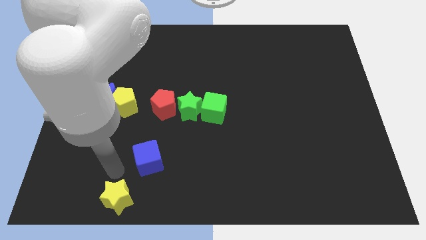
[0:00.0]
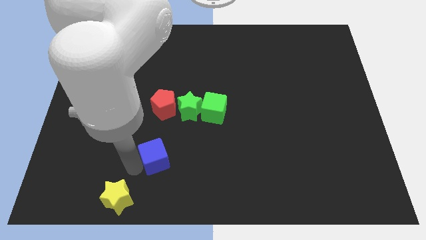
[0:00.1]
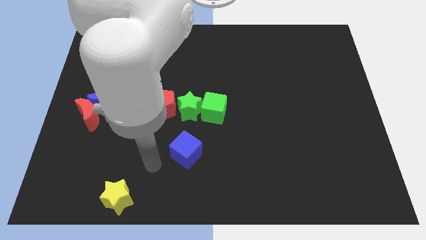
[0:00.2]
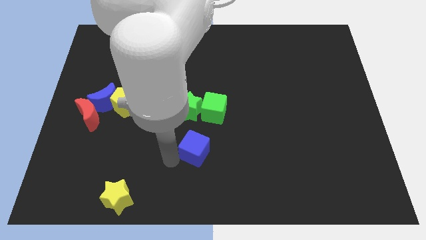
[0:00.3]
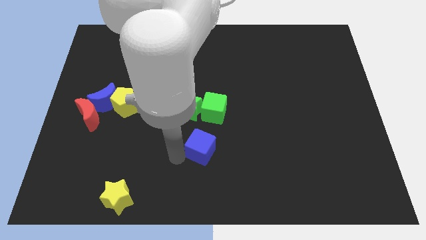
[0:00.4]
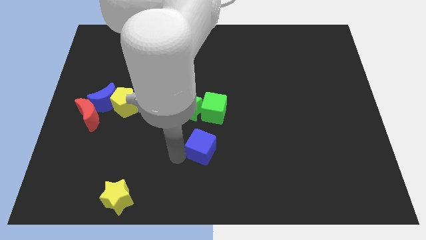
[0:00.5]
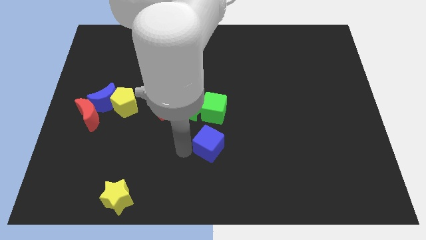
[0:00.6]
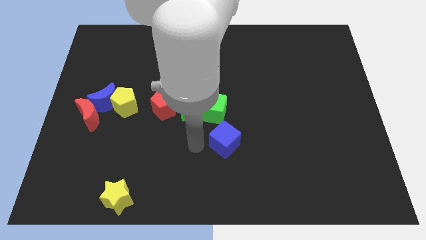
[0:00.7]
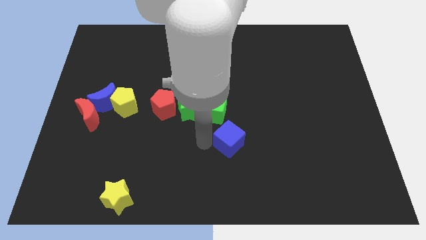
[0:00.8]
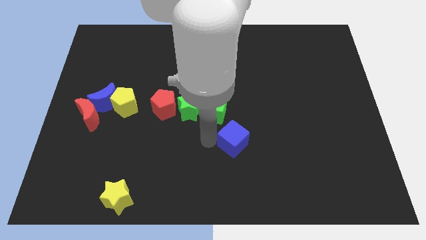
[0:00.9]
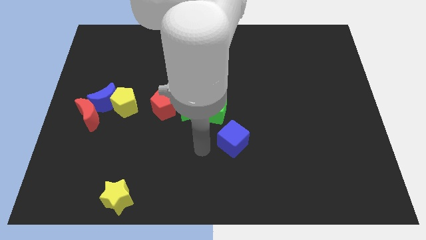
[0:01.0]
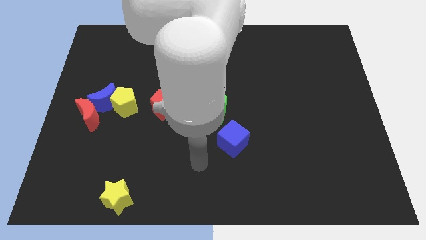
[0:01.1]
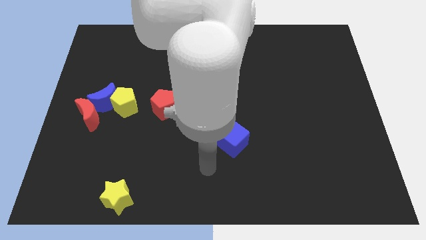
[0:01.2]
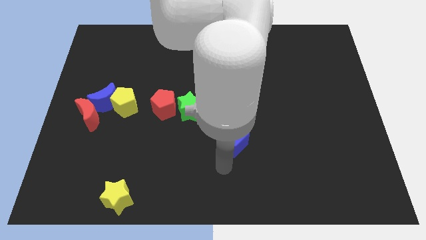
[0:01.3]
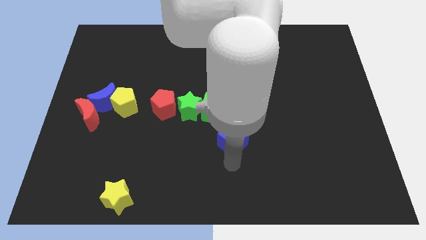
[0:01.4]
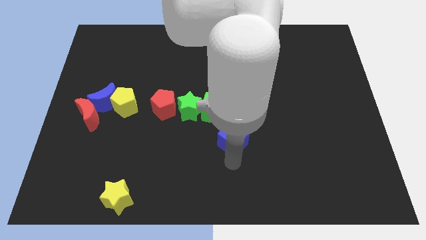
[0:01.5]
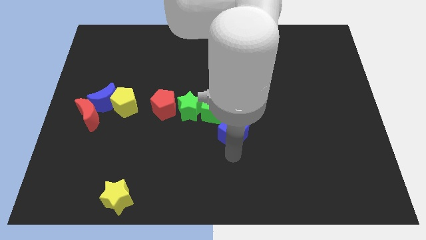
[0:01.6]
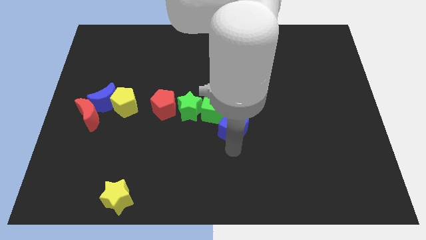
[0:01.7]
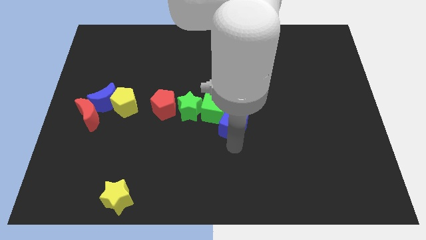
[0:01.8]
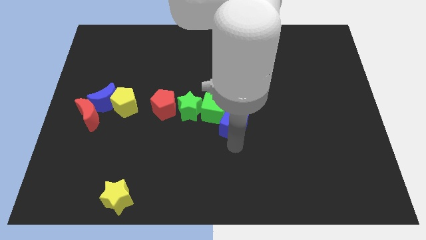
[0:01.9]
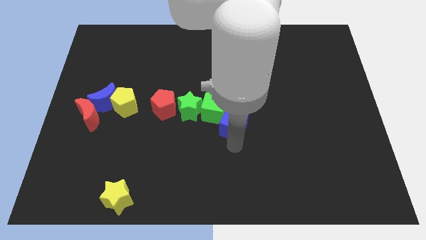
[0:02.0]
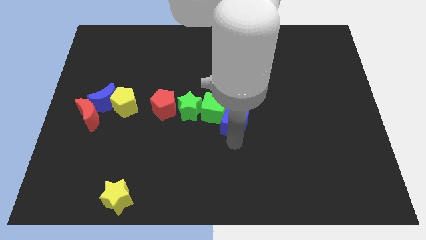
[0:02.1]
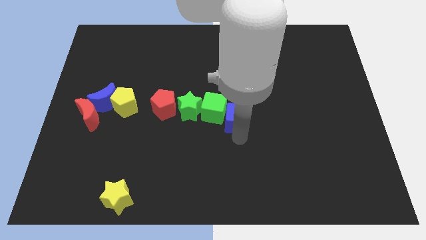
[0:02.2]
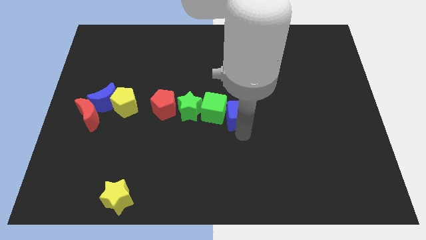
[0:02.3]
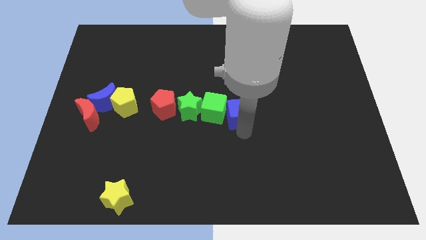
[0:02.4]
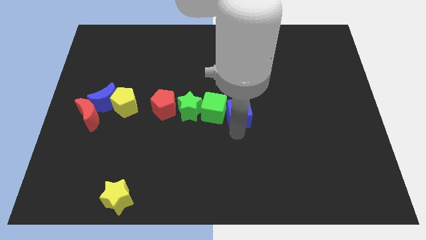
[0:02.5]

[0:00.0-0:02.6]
push the blue cube next to the green cube

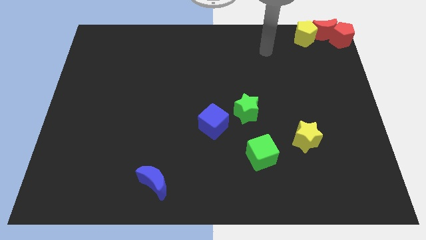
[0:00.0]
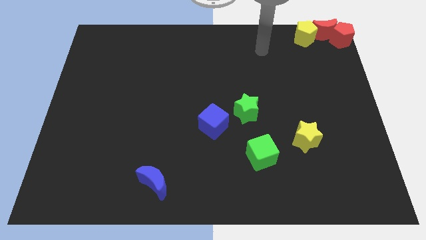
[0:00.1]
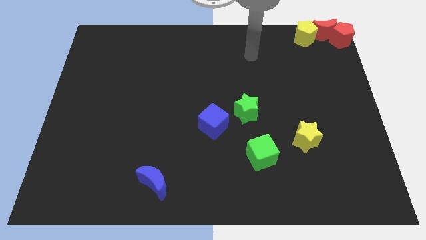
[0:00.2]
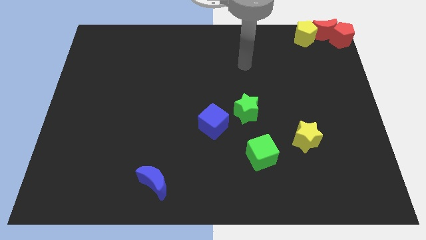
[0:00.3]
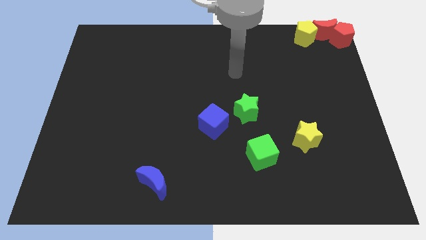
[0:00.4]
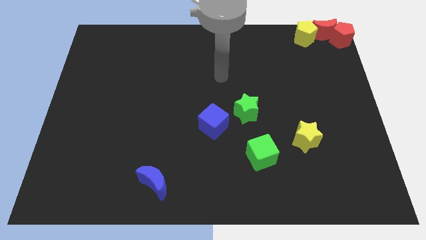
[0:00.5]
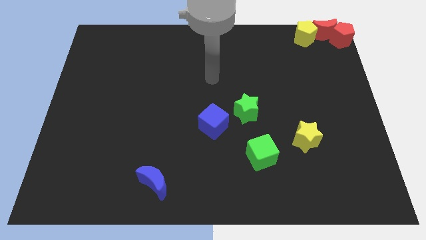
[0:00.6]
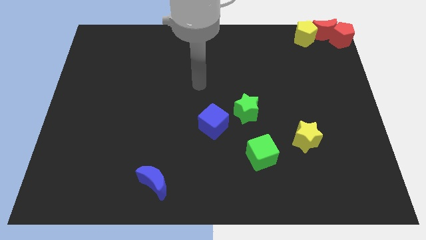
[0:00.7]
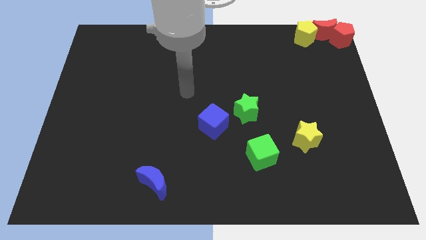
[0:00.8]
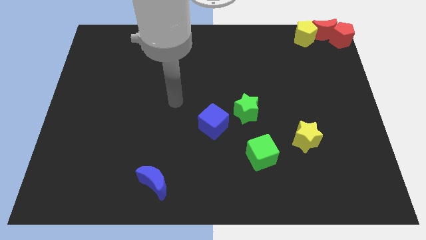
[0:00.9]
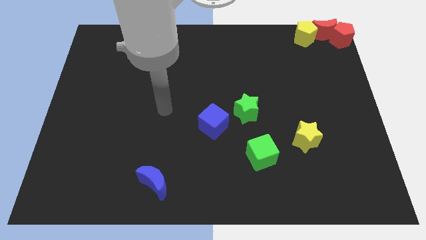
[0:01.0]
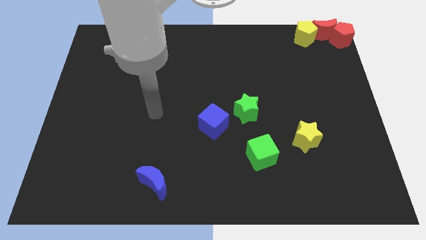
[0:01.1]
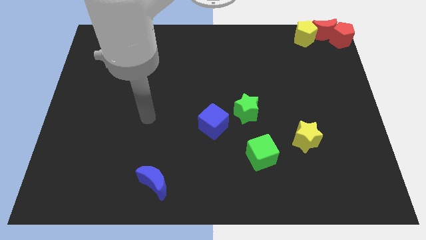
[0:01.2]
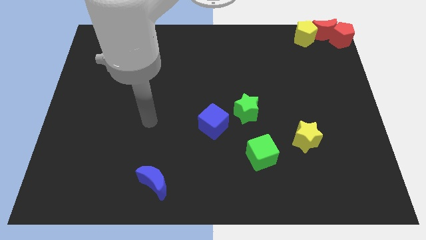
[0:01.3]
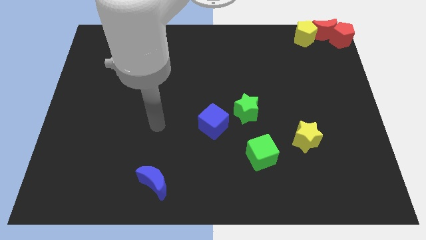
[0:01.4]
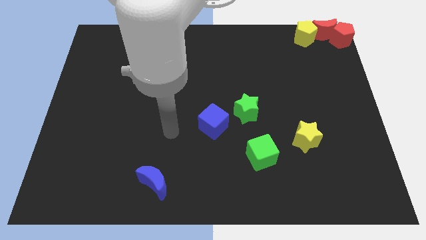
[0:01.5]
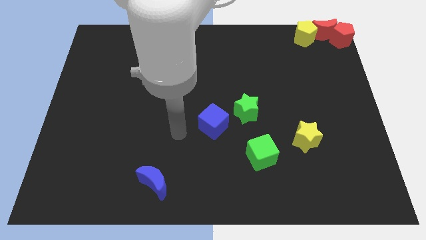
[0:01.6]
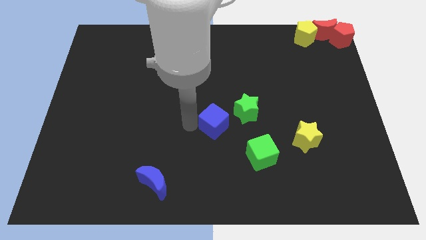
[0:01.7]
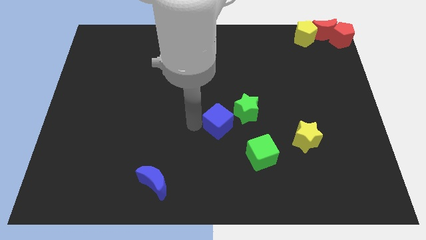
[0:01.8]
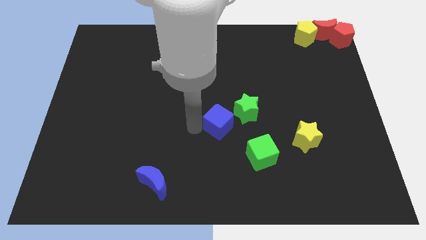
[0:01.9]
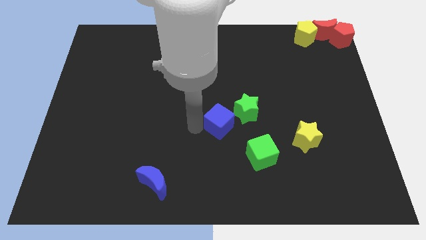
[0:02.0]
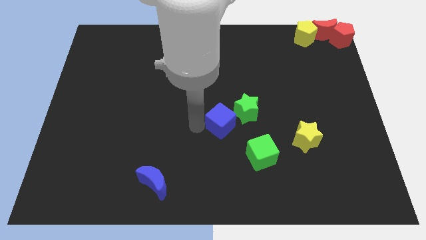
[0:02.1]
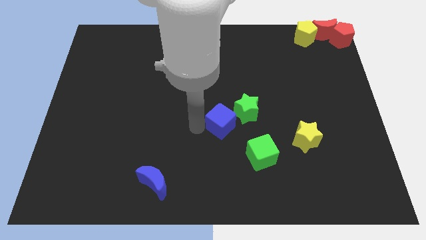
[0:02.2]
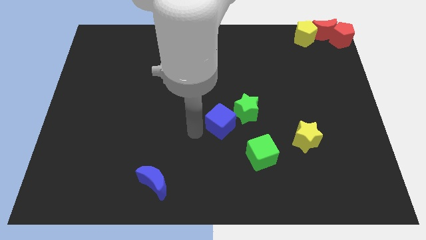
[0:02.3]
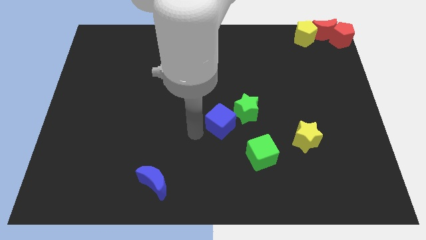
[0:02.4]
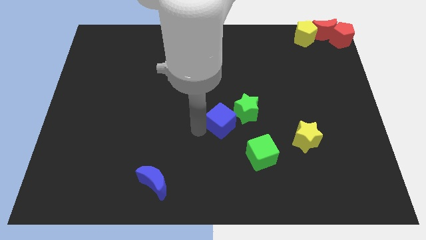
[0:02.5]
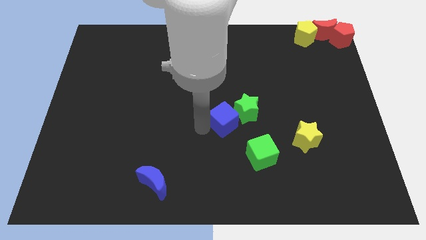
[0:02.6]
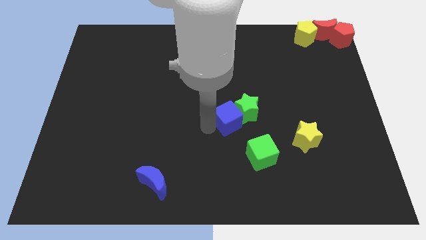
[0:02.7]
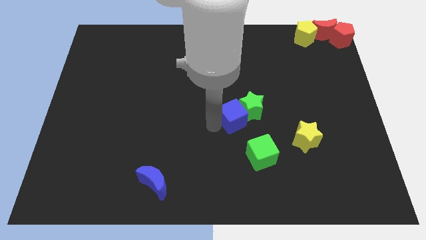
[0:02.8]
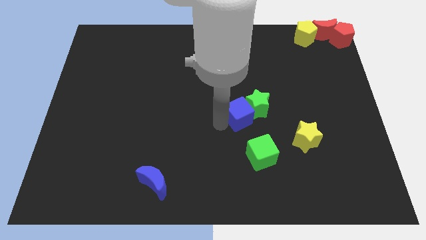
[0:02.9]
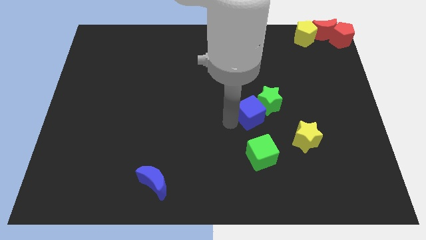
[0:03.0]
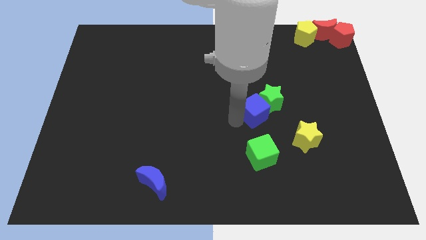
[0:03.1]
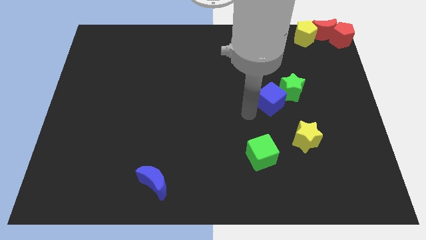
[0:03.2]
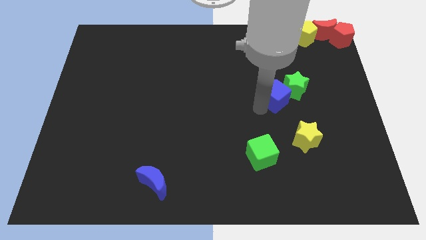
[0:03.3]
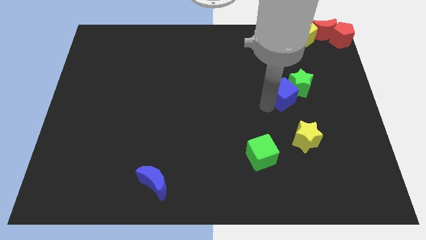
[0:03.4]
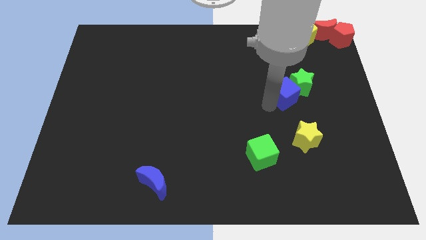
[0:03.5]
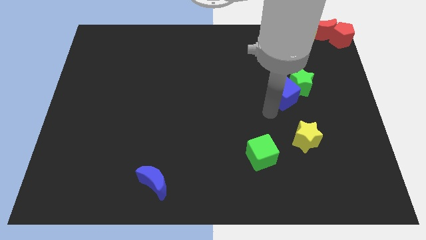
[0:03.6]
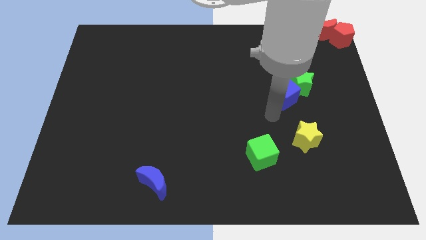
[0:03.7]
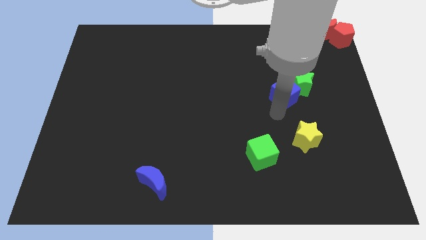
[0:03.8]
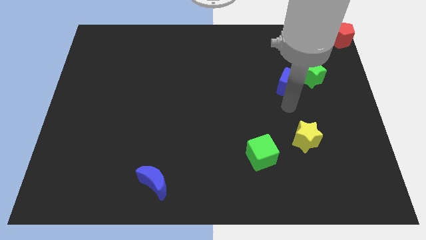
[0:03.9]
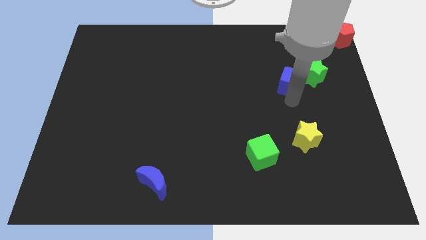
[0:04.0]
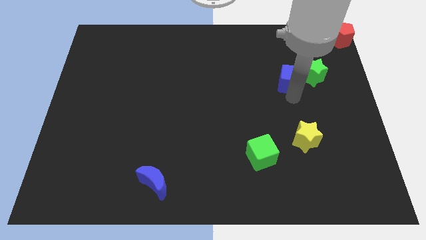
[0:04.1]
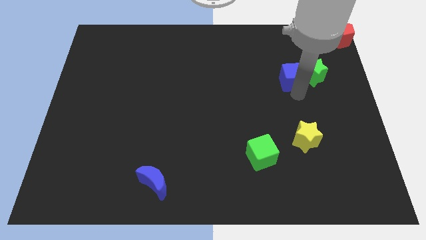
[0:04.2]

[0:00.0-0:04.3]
move the blue cube into the green star

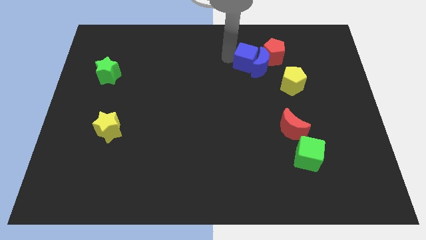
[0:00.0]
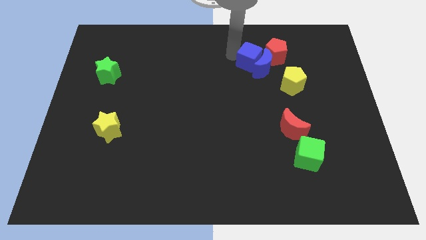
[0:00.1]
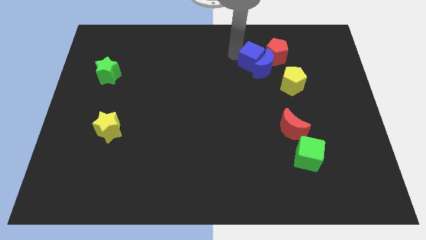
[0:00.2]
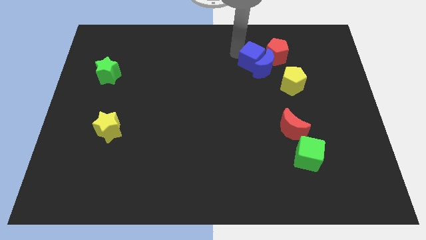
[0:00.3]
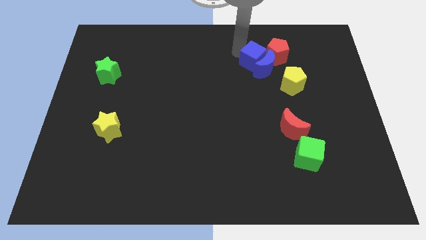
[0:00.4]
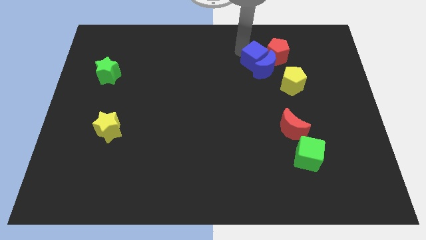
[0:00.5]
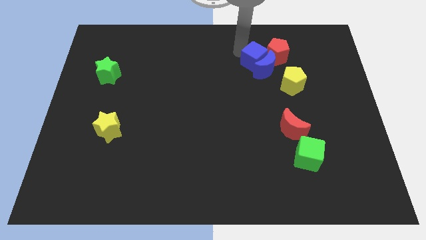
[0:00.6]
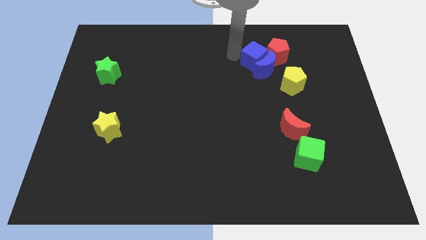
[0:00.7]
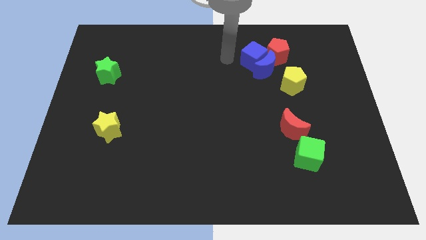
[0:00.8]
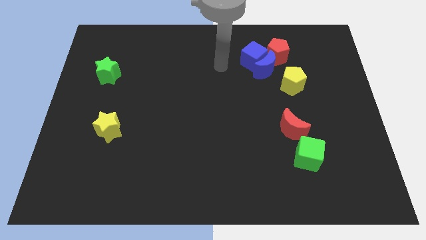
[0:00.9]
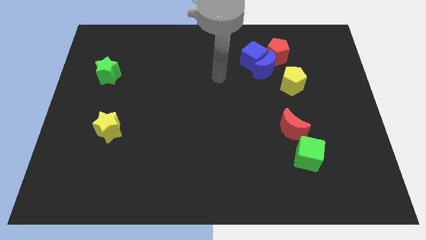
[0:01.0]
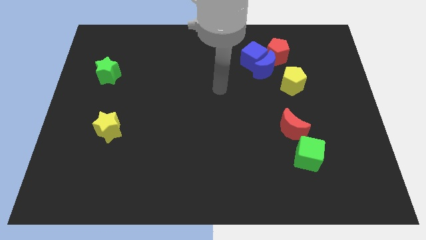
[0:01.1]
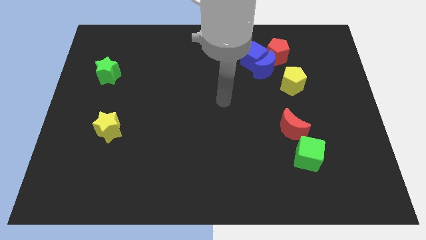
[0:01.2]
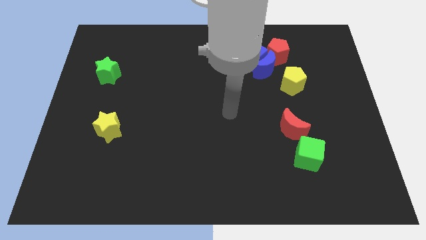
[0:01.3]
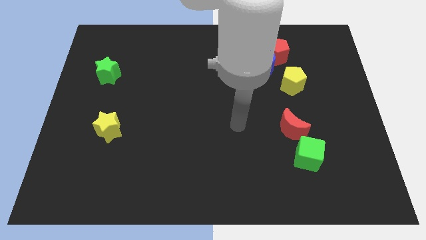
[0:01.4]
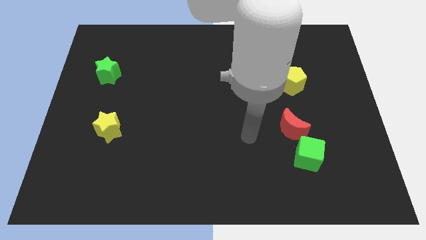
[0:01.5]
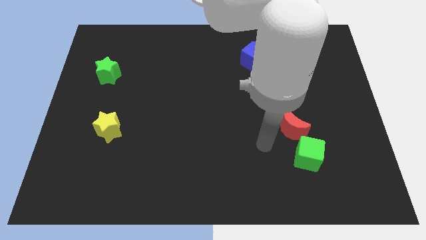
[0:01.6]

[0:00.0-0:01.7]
move blue cube into blue crescent

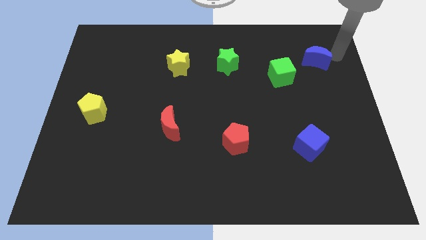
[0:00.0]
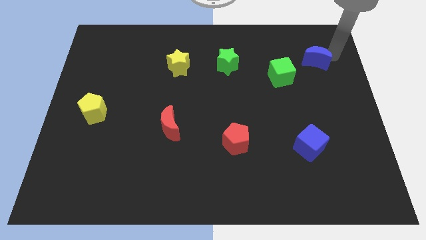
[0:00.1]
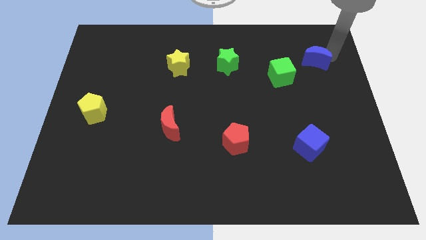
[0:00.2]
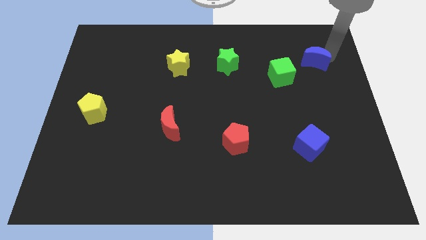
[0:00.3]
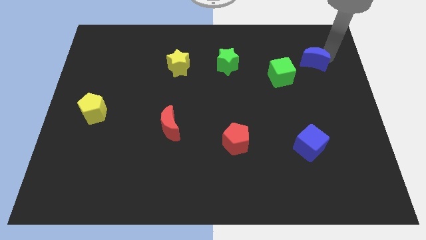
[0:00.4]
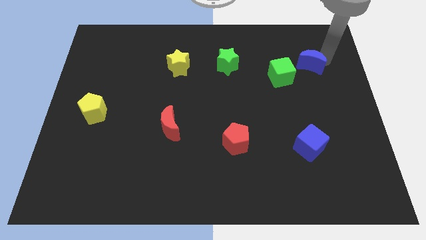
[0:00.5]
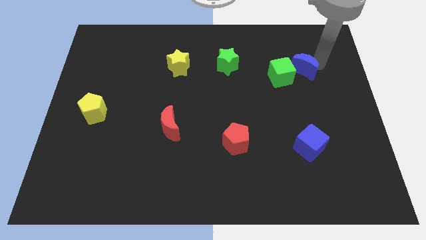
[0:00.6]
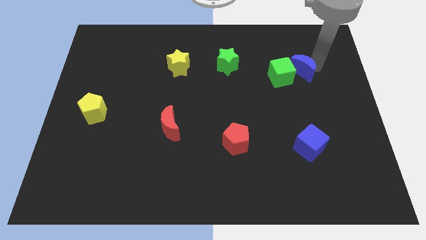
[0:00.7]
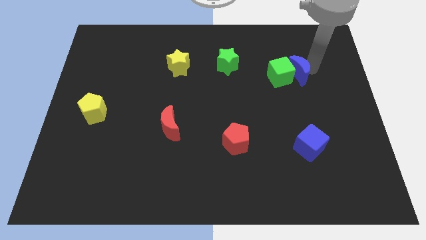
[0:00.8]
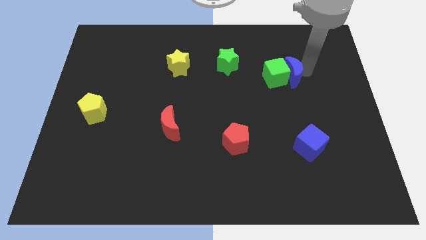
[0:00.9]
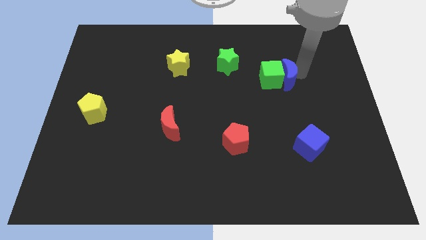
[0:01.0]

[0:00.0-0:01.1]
move blue moon in to green cube
